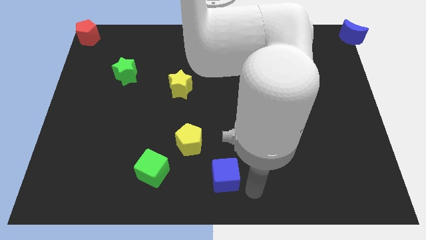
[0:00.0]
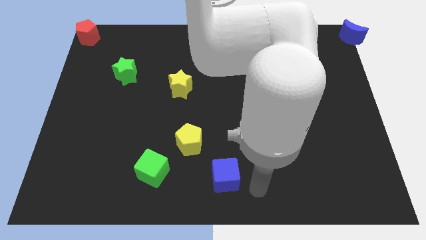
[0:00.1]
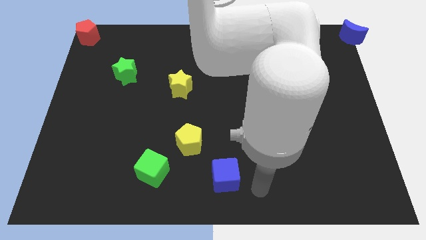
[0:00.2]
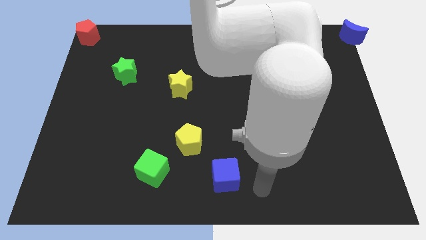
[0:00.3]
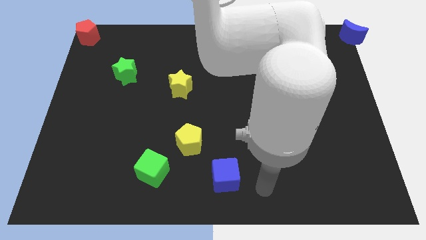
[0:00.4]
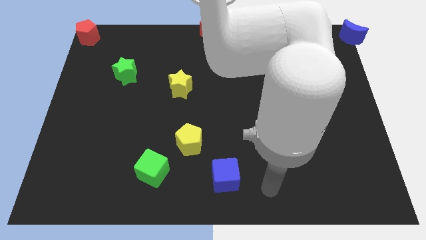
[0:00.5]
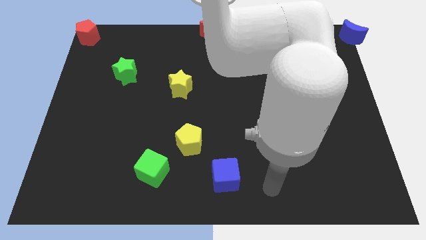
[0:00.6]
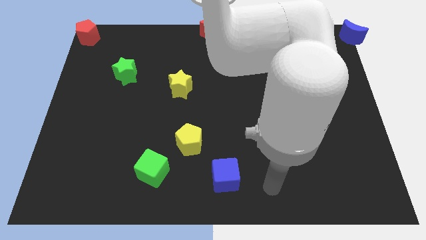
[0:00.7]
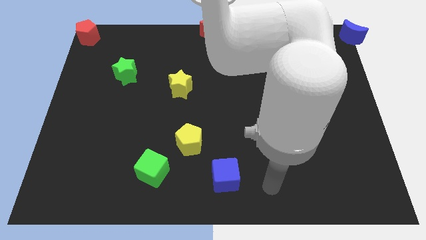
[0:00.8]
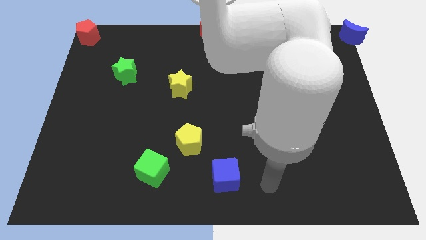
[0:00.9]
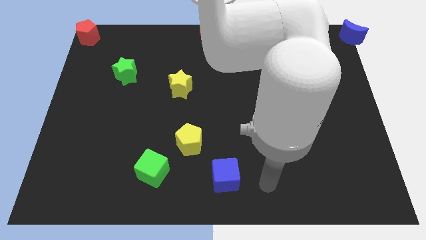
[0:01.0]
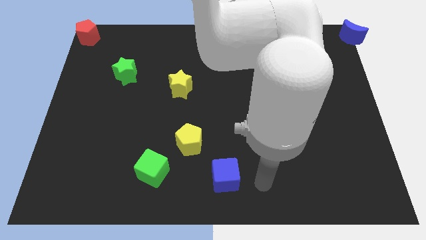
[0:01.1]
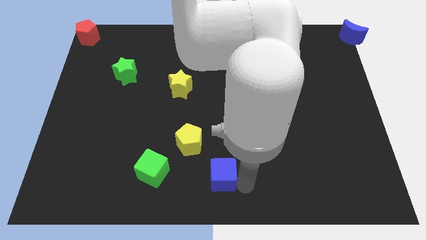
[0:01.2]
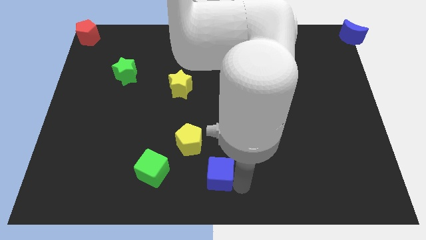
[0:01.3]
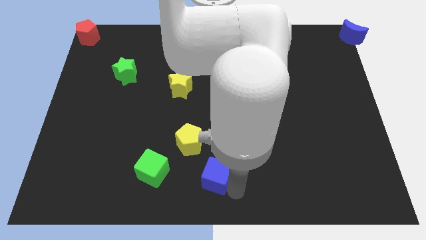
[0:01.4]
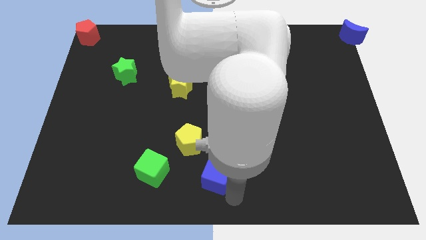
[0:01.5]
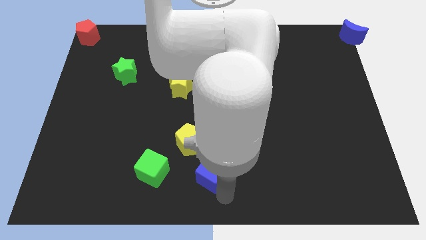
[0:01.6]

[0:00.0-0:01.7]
put the blue cube at the bottom center of the board

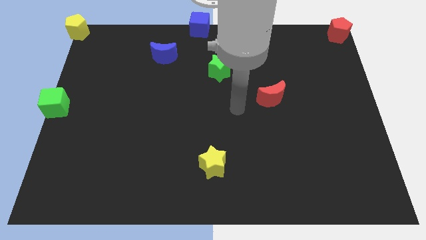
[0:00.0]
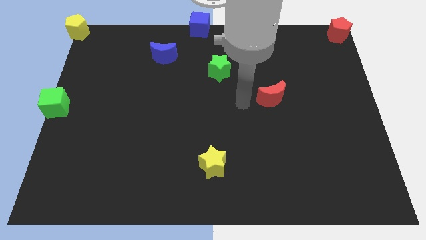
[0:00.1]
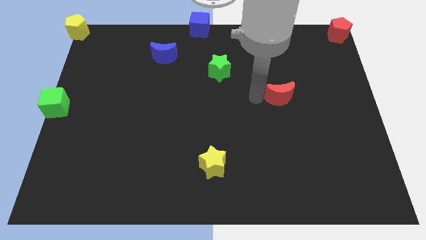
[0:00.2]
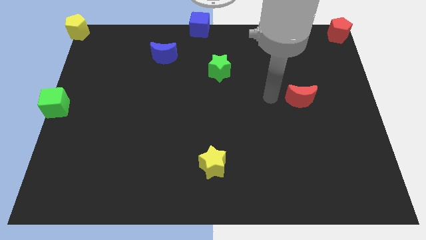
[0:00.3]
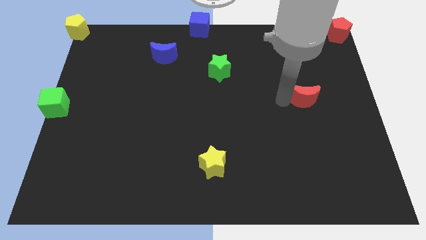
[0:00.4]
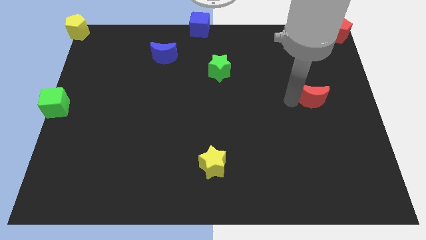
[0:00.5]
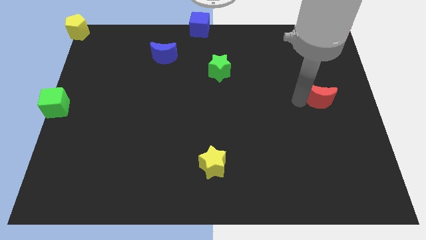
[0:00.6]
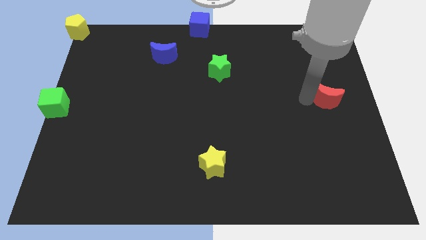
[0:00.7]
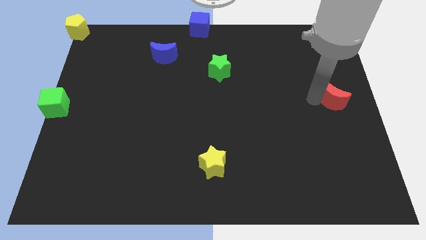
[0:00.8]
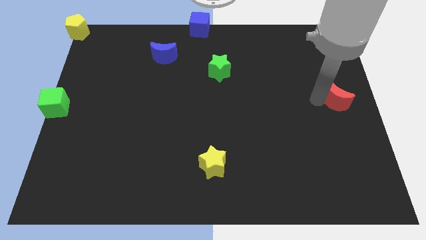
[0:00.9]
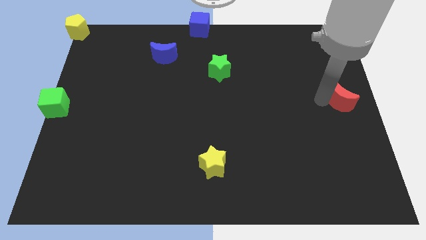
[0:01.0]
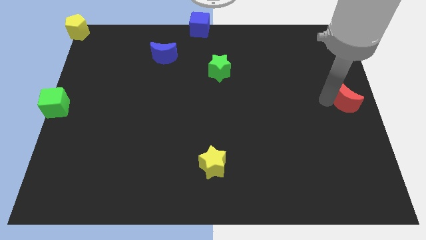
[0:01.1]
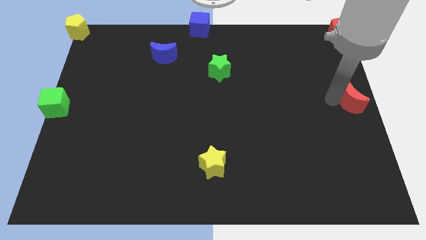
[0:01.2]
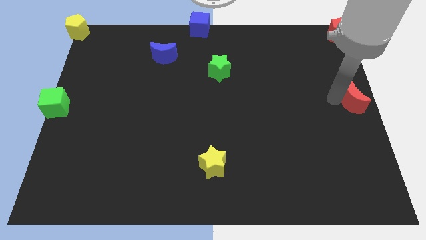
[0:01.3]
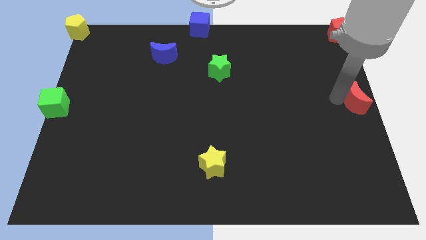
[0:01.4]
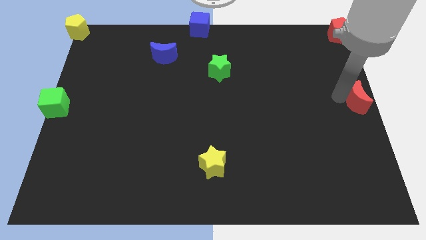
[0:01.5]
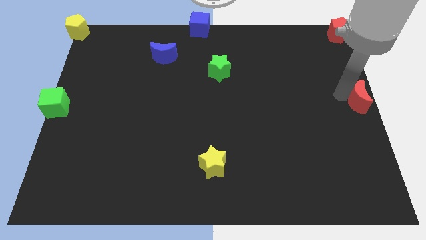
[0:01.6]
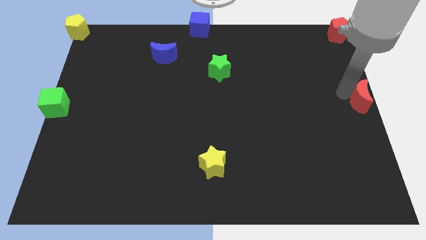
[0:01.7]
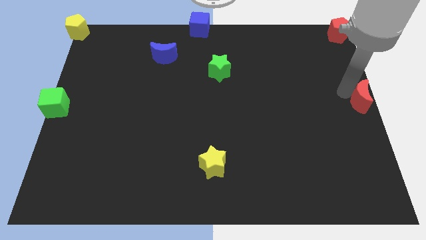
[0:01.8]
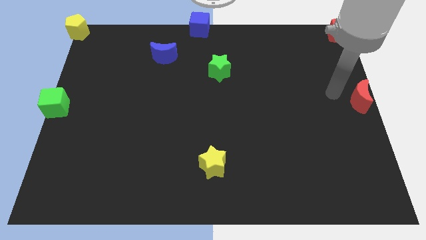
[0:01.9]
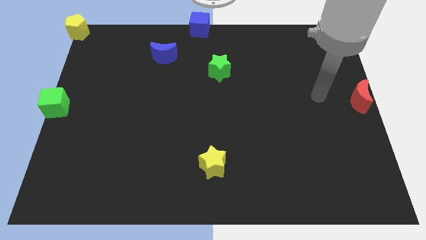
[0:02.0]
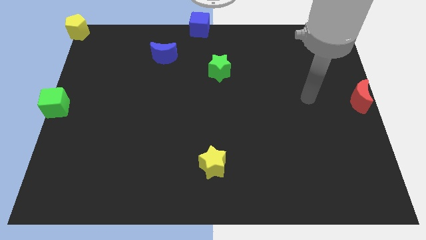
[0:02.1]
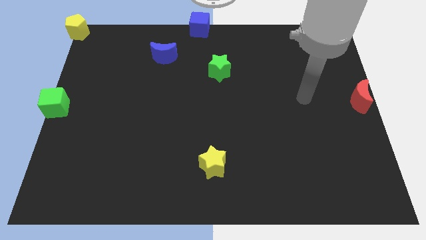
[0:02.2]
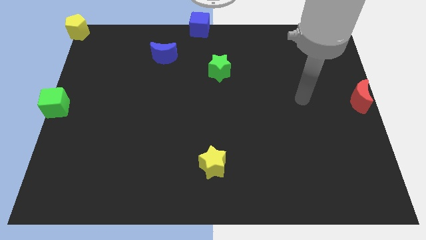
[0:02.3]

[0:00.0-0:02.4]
place the red moon below the red pentagon

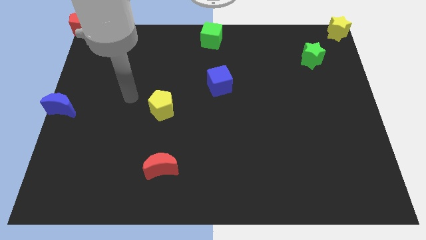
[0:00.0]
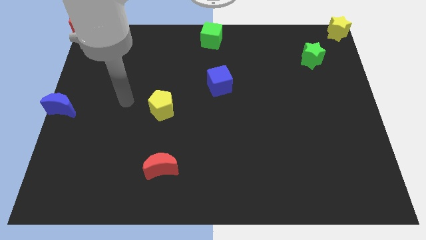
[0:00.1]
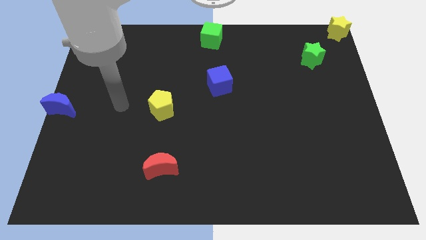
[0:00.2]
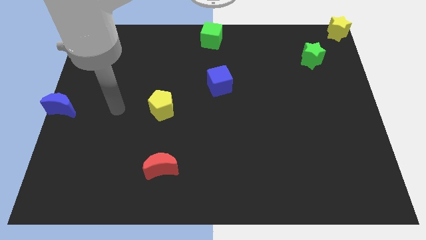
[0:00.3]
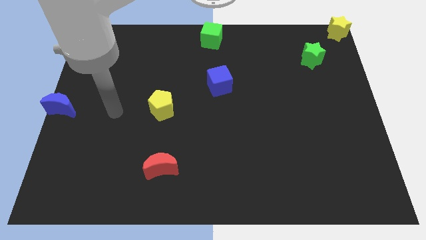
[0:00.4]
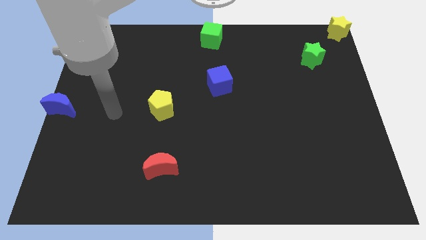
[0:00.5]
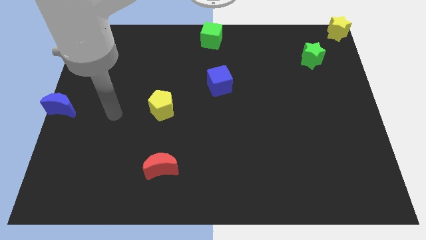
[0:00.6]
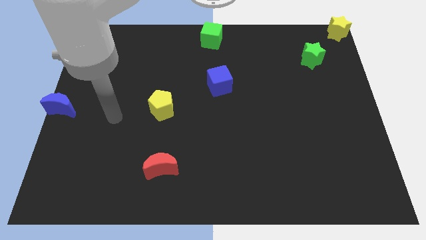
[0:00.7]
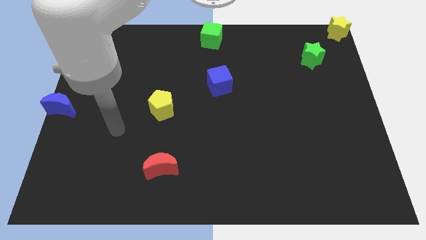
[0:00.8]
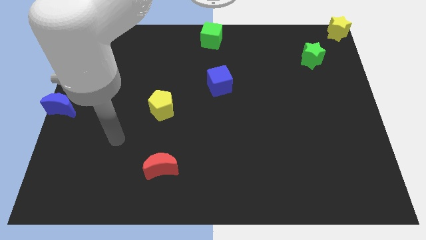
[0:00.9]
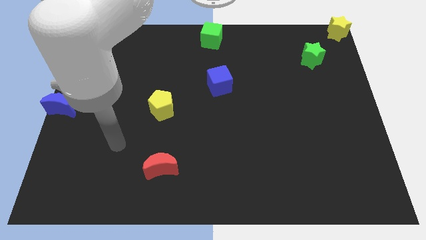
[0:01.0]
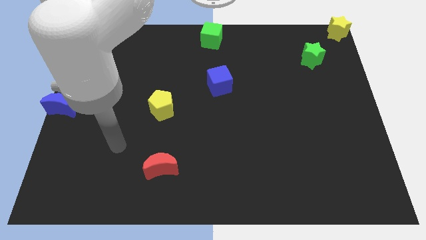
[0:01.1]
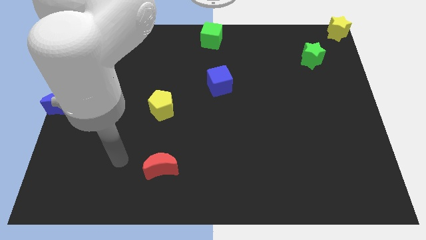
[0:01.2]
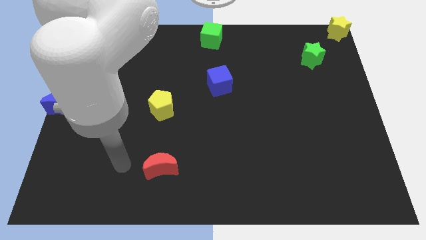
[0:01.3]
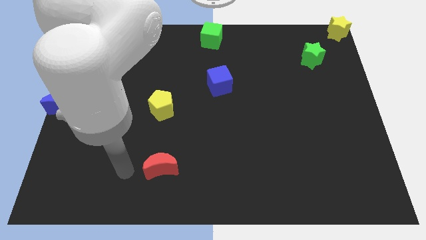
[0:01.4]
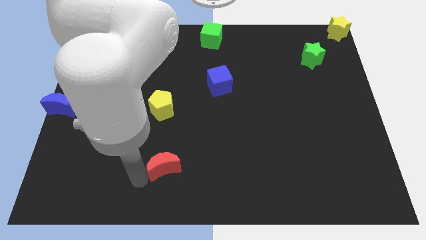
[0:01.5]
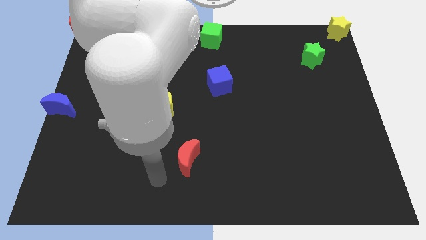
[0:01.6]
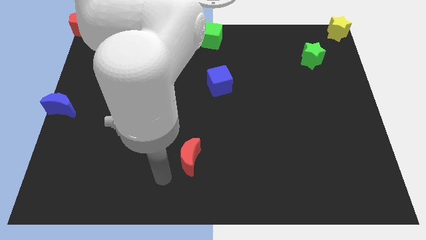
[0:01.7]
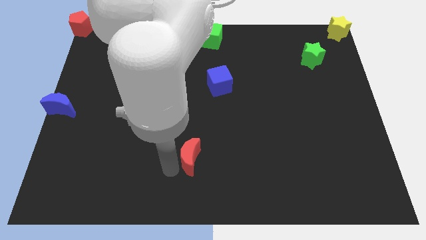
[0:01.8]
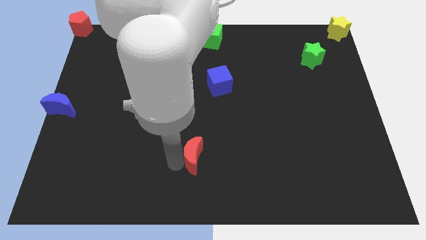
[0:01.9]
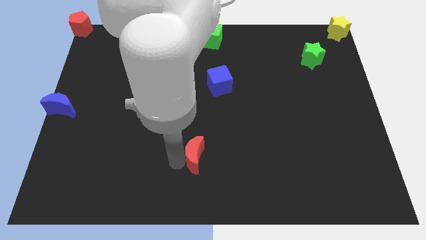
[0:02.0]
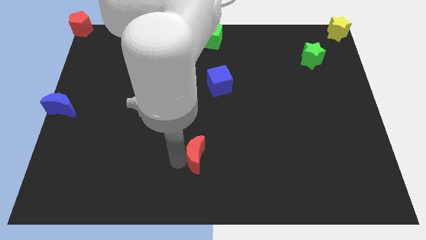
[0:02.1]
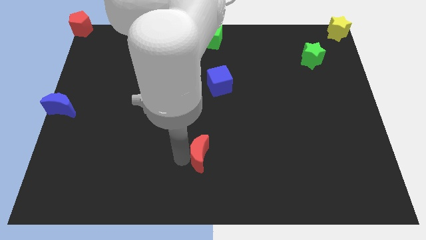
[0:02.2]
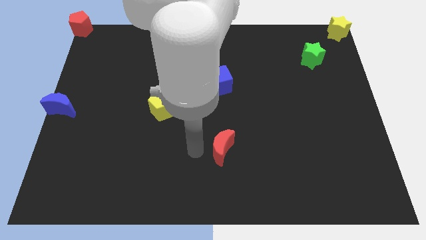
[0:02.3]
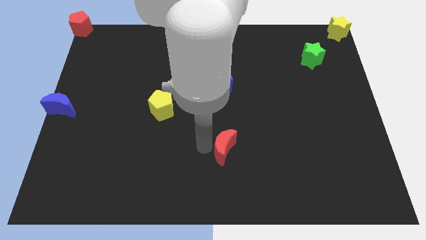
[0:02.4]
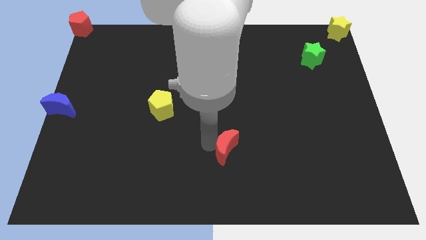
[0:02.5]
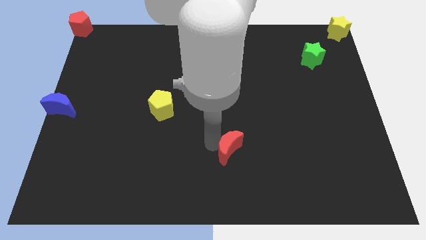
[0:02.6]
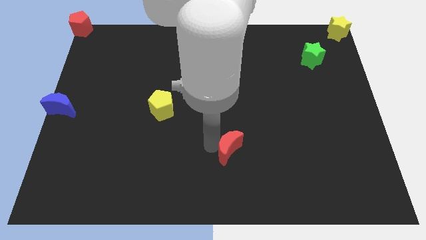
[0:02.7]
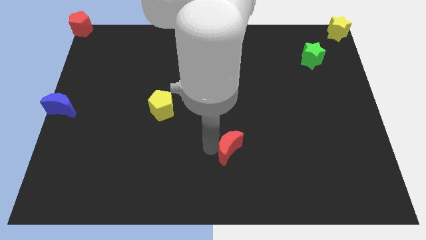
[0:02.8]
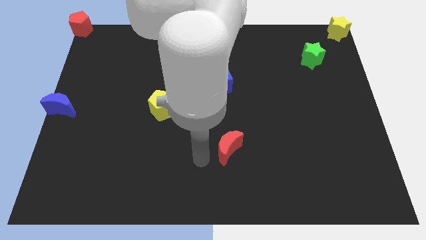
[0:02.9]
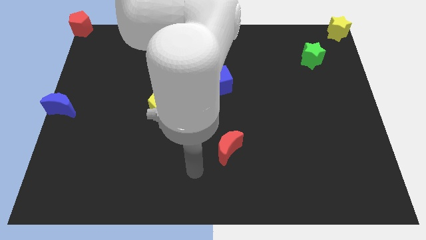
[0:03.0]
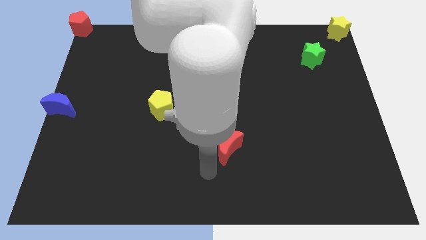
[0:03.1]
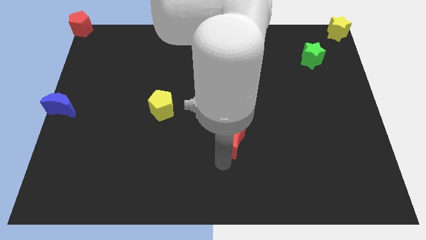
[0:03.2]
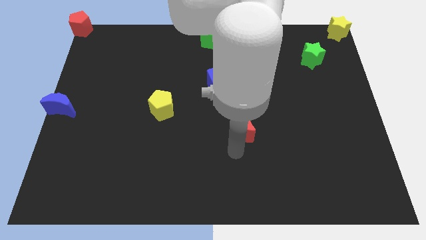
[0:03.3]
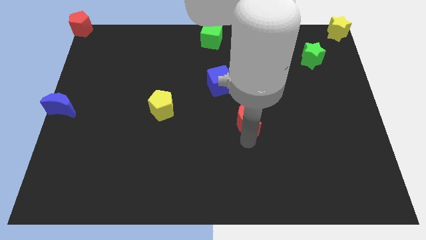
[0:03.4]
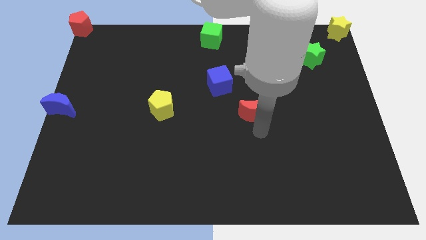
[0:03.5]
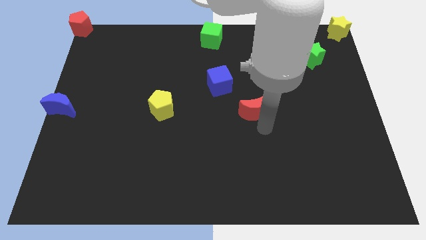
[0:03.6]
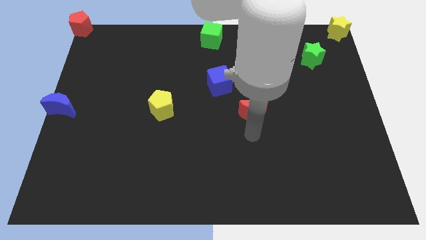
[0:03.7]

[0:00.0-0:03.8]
place the red moon horizontally to the right side of the yellow pentagon

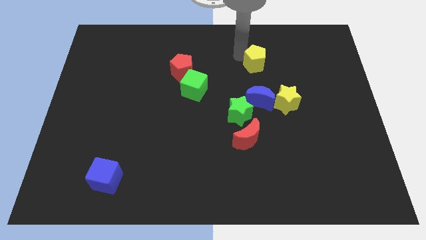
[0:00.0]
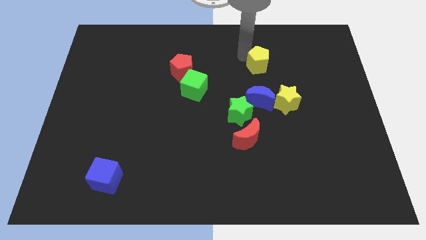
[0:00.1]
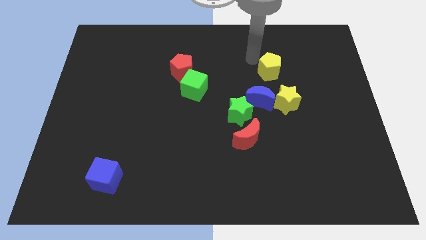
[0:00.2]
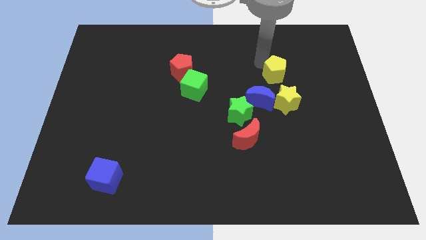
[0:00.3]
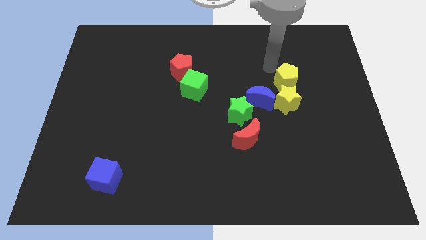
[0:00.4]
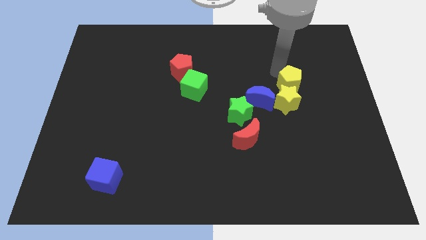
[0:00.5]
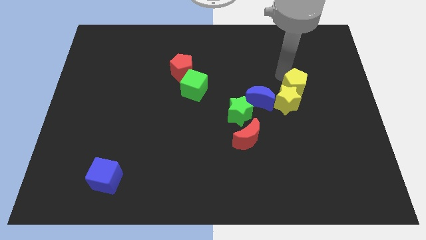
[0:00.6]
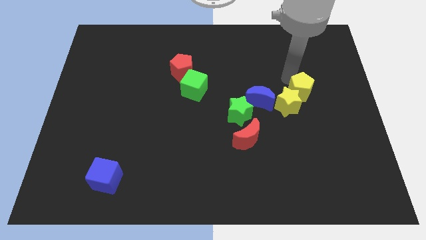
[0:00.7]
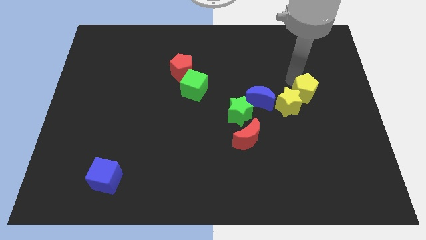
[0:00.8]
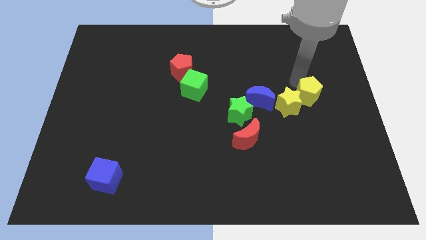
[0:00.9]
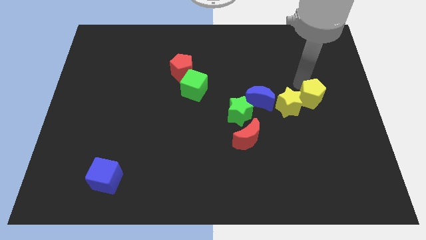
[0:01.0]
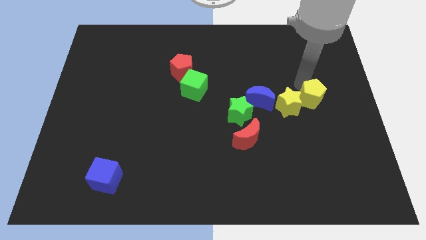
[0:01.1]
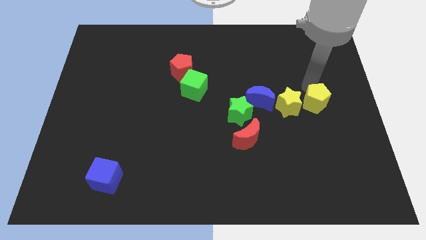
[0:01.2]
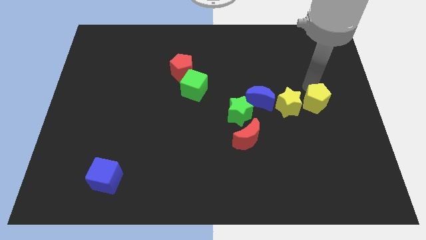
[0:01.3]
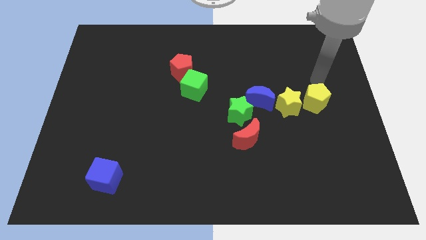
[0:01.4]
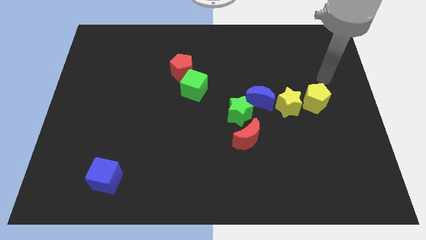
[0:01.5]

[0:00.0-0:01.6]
push the yellow pentagon right to the yellow star
